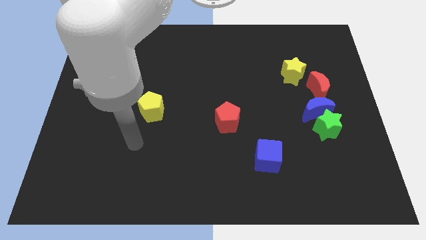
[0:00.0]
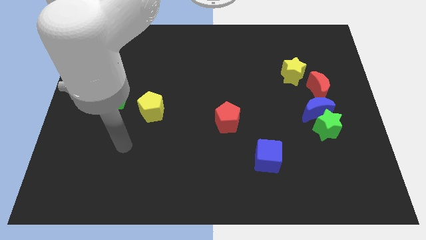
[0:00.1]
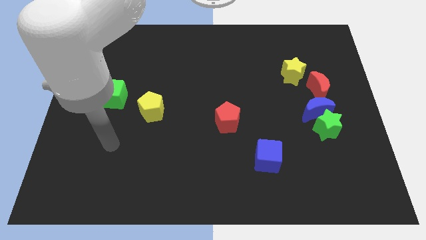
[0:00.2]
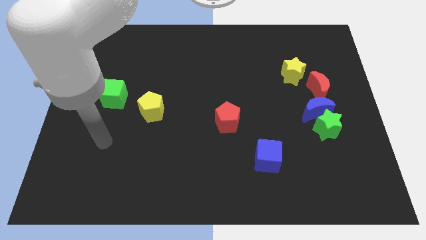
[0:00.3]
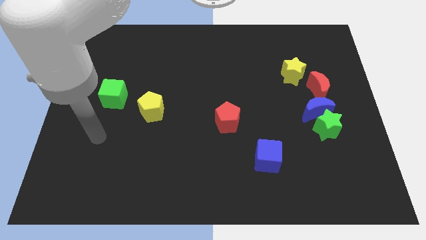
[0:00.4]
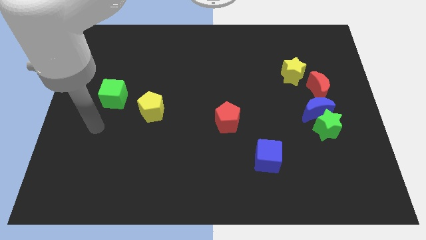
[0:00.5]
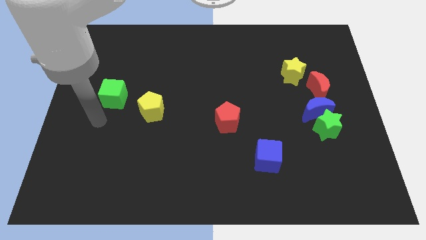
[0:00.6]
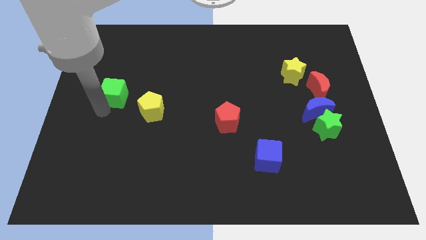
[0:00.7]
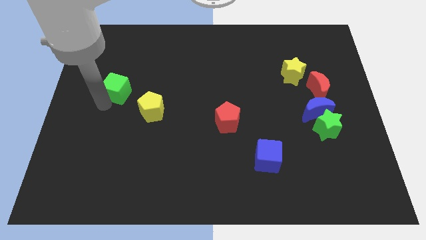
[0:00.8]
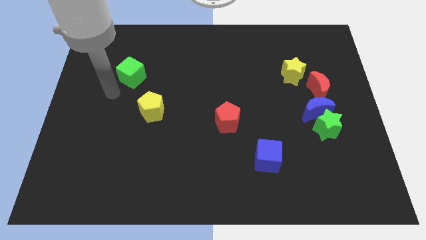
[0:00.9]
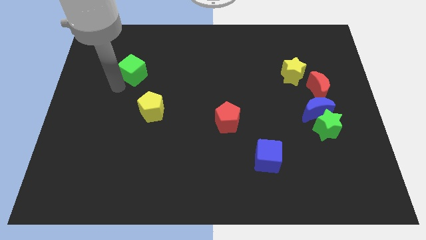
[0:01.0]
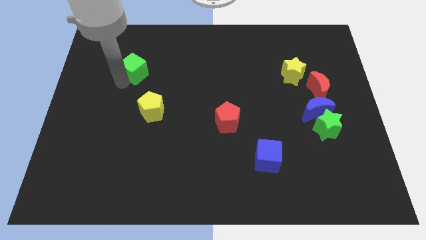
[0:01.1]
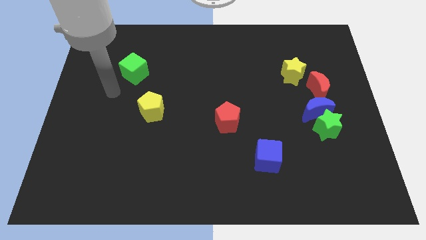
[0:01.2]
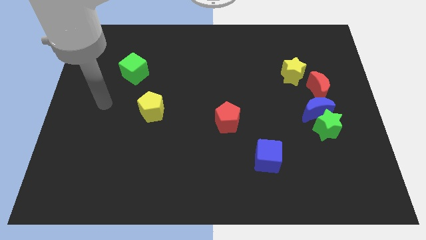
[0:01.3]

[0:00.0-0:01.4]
move the green cube parallel to the top of the yellow pentagon

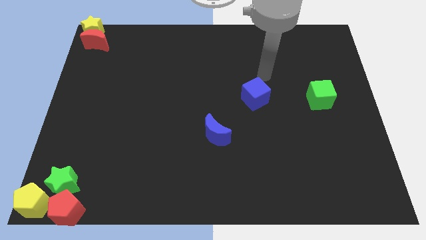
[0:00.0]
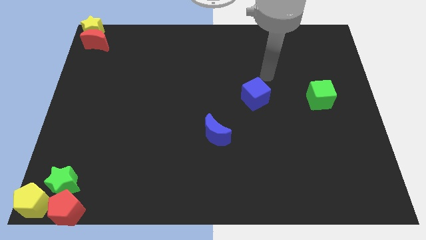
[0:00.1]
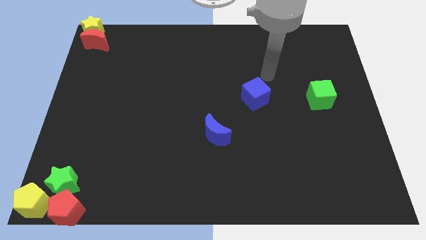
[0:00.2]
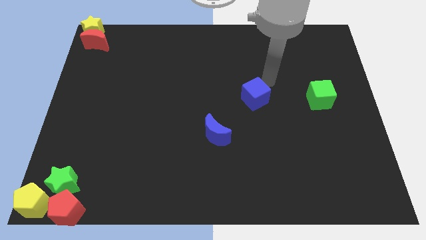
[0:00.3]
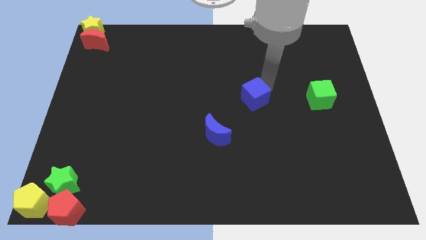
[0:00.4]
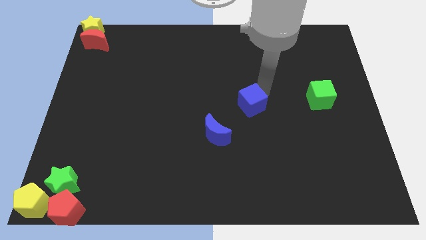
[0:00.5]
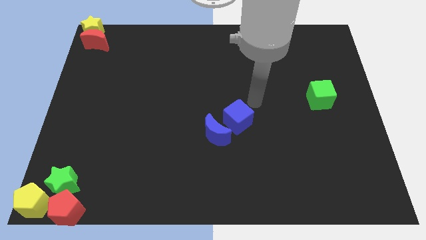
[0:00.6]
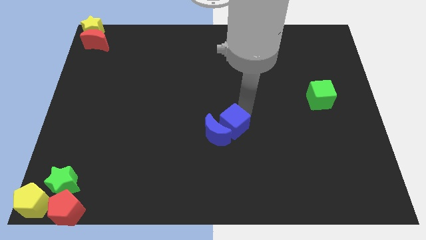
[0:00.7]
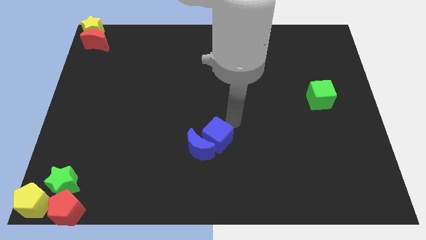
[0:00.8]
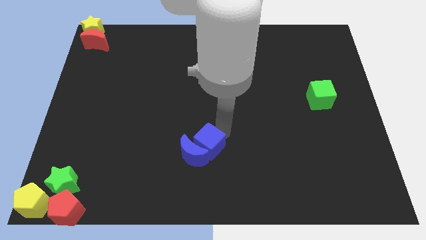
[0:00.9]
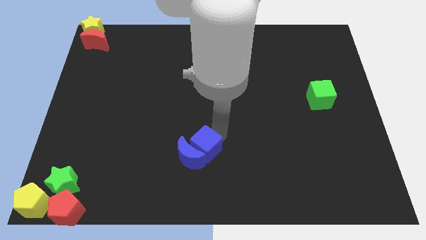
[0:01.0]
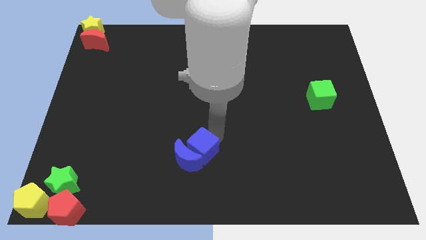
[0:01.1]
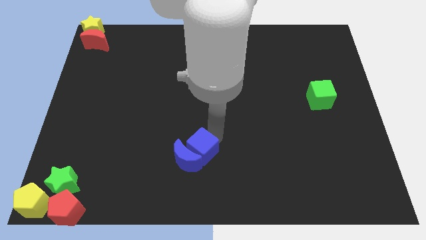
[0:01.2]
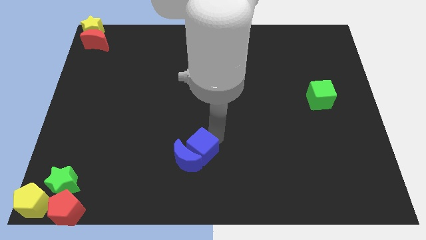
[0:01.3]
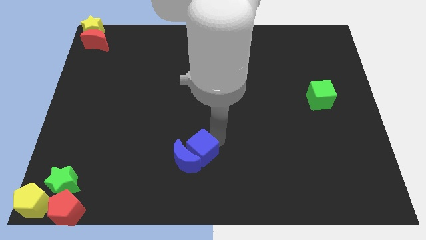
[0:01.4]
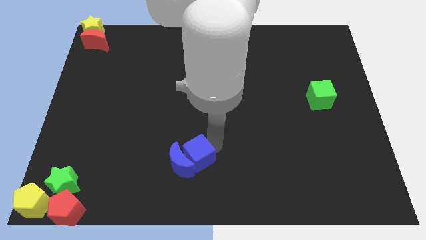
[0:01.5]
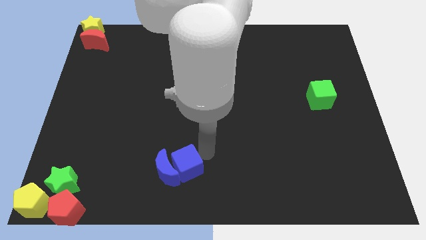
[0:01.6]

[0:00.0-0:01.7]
move the blue cube into the blue moon

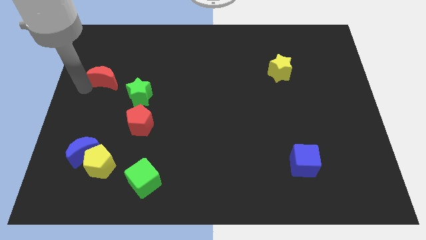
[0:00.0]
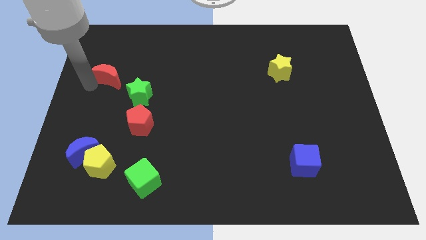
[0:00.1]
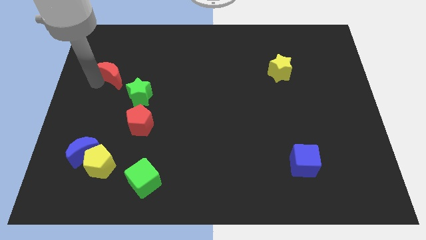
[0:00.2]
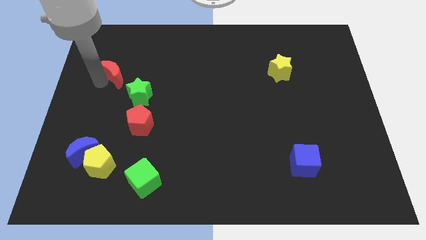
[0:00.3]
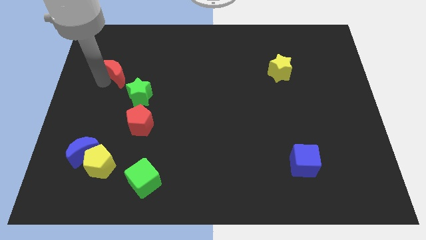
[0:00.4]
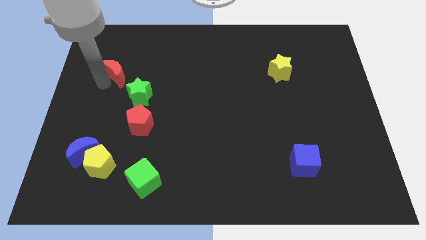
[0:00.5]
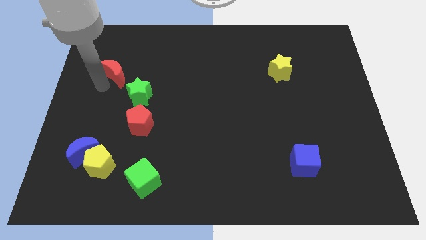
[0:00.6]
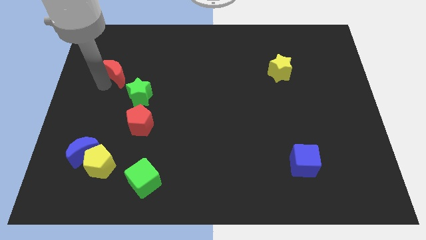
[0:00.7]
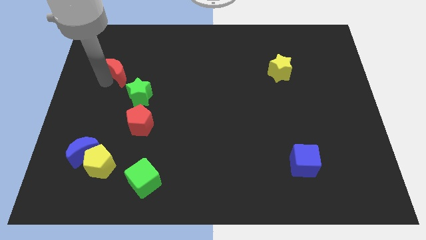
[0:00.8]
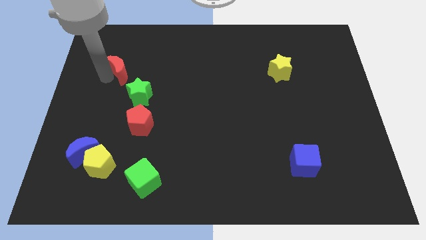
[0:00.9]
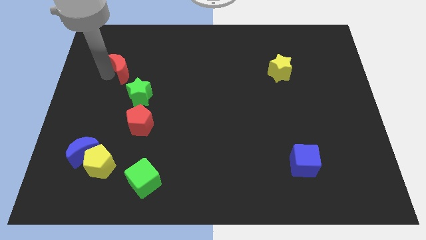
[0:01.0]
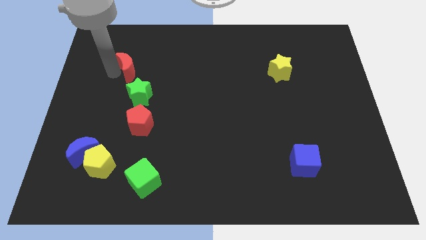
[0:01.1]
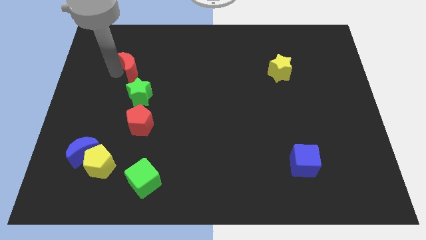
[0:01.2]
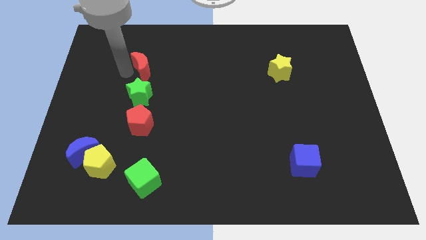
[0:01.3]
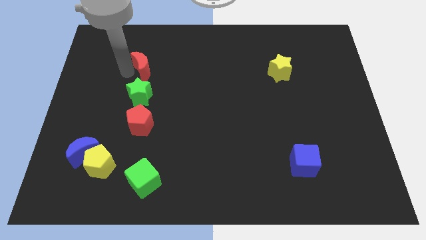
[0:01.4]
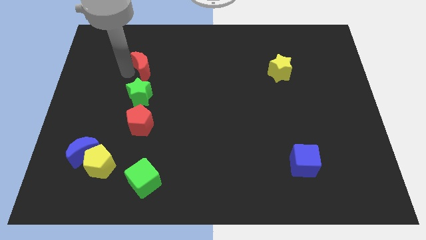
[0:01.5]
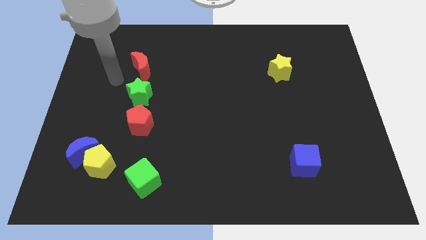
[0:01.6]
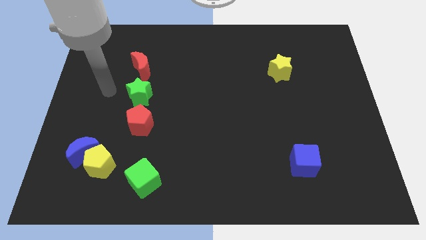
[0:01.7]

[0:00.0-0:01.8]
place red moon to the top of green star

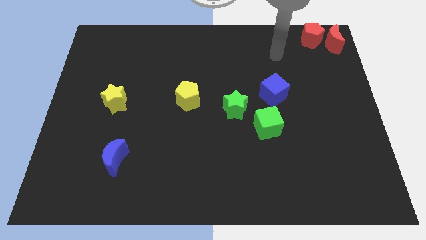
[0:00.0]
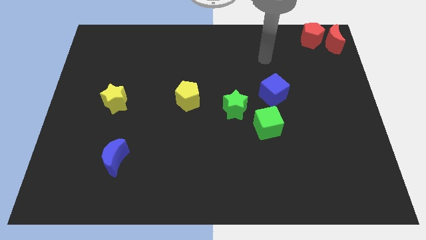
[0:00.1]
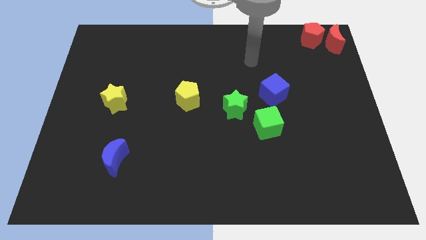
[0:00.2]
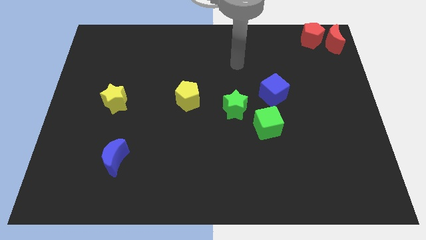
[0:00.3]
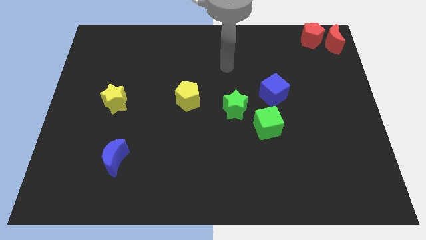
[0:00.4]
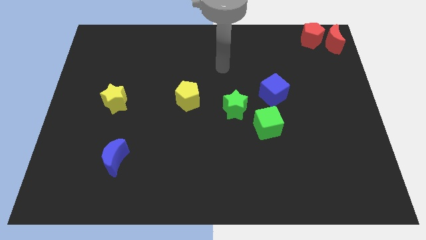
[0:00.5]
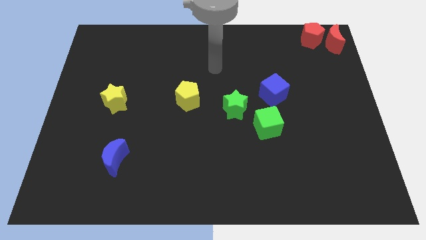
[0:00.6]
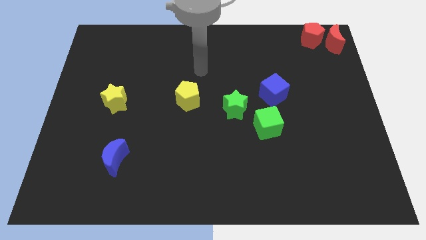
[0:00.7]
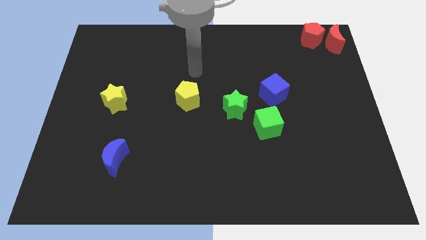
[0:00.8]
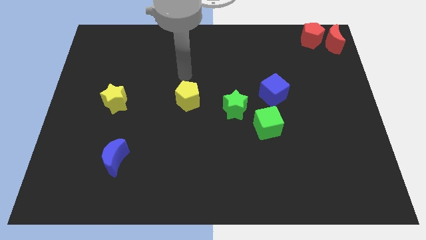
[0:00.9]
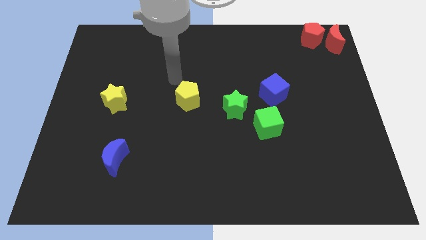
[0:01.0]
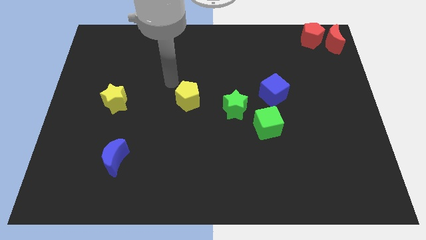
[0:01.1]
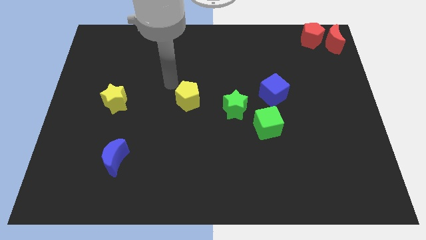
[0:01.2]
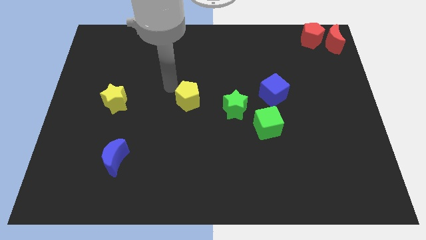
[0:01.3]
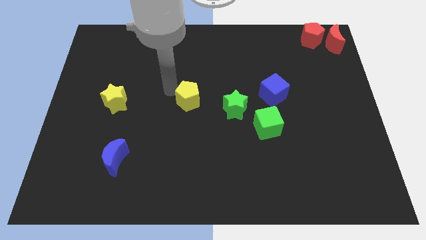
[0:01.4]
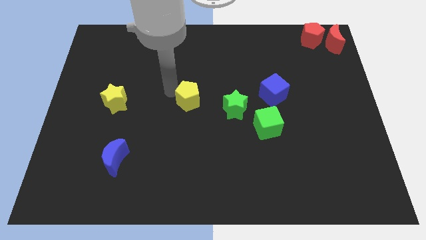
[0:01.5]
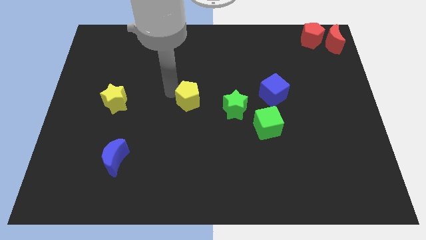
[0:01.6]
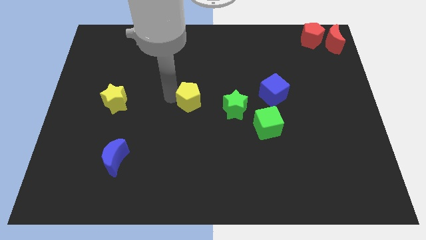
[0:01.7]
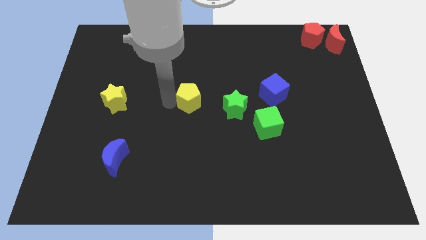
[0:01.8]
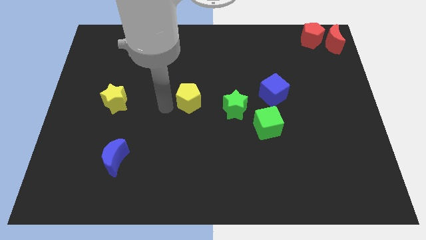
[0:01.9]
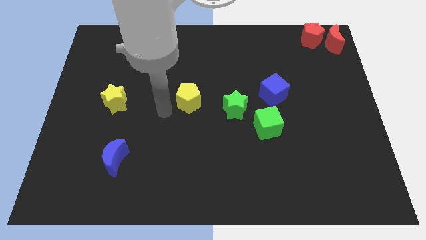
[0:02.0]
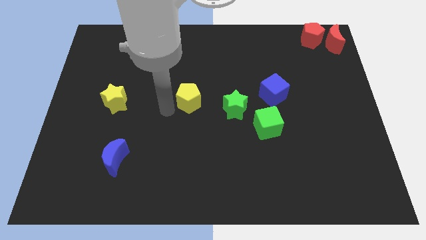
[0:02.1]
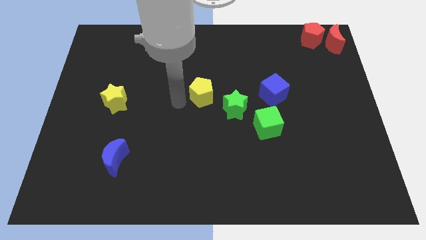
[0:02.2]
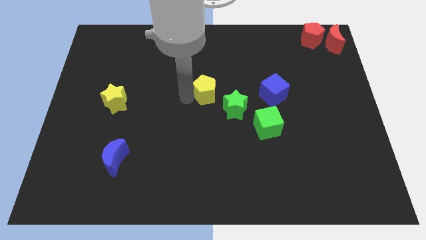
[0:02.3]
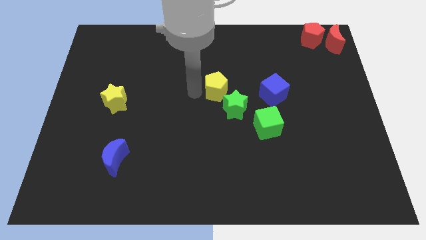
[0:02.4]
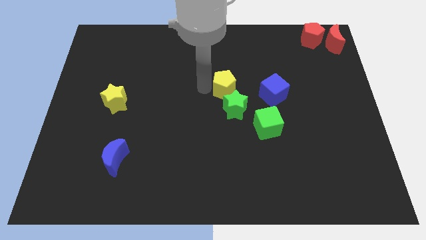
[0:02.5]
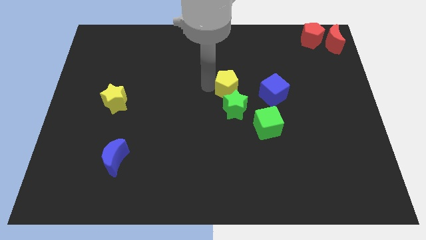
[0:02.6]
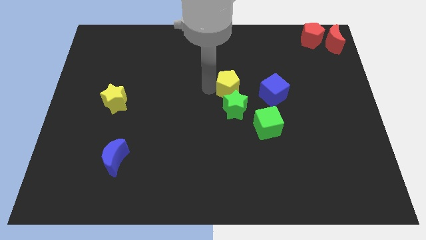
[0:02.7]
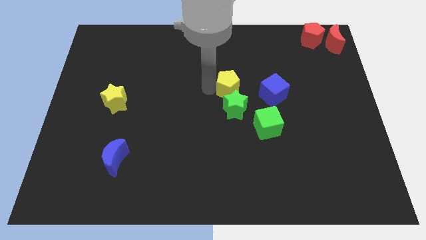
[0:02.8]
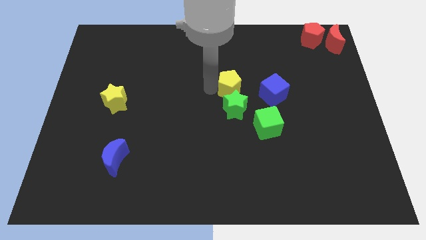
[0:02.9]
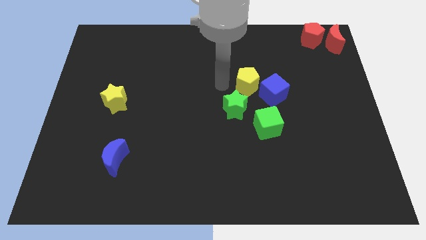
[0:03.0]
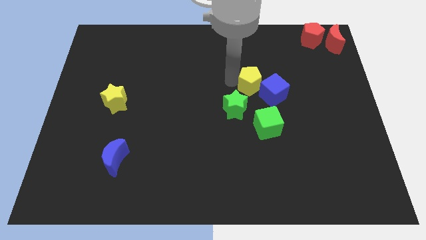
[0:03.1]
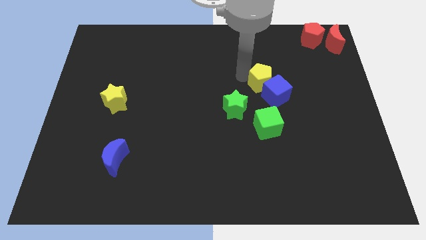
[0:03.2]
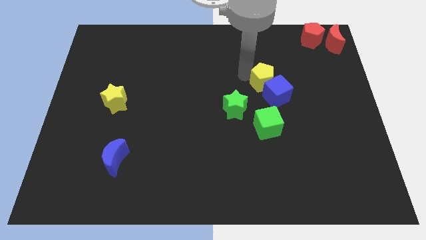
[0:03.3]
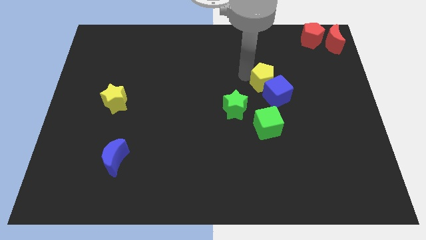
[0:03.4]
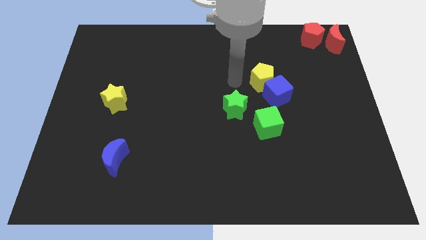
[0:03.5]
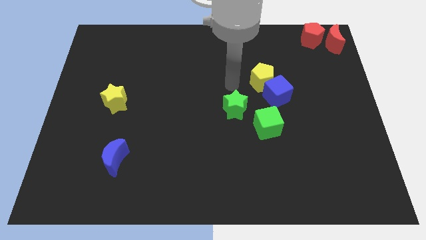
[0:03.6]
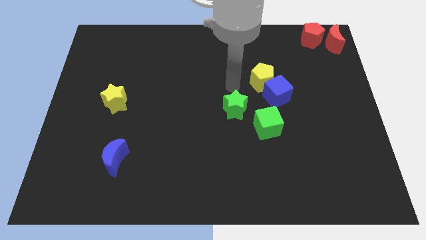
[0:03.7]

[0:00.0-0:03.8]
push the yellow pentagon into the blue cube

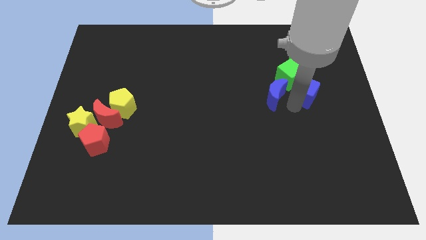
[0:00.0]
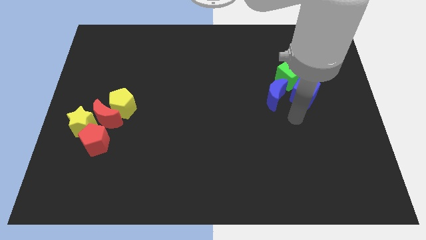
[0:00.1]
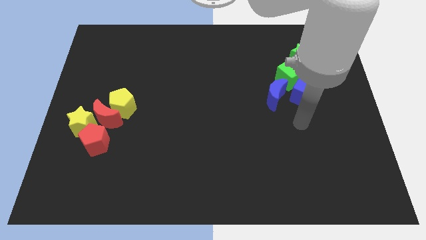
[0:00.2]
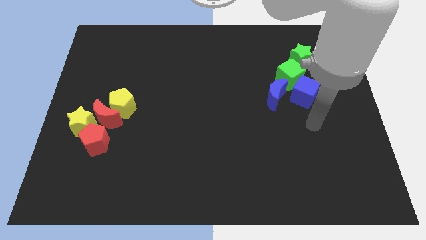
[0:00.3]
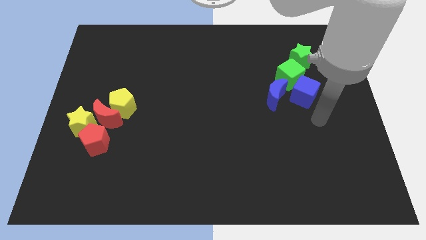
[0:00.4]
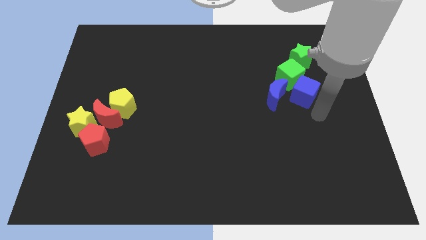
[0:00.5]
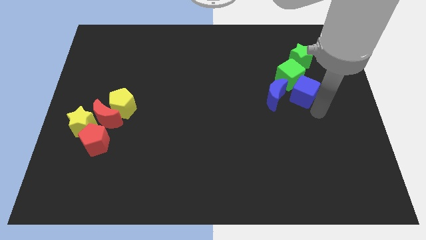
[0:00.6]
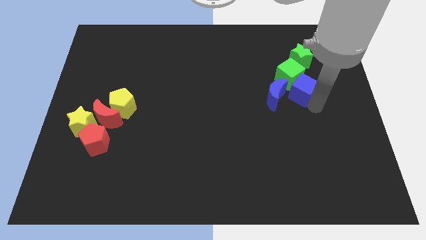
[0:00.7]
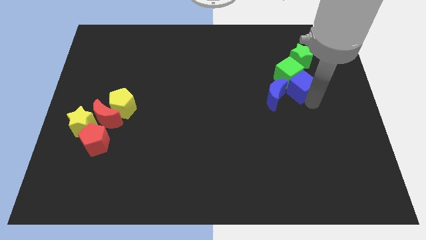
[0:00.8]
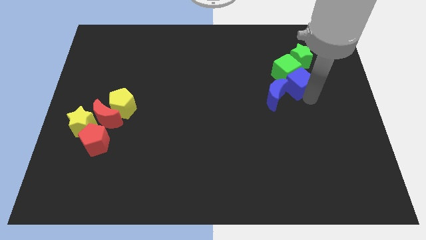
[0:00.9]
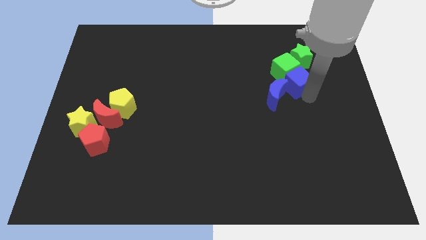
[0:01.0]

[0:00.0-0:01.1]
place the blue cube and green cube together between the green star and blue crescent
